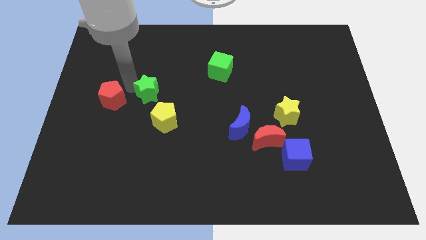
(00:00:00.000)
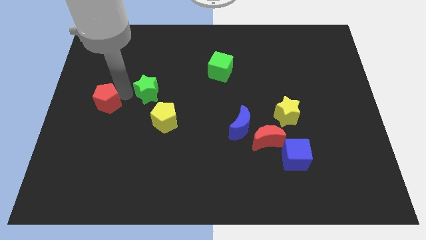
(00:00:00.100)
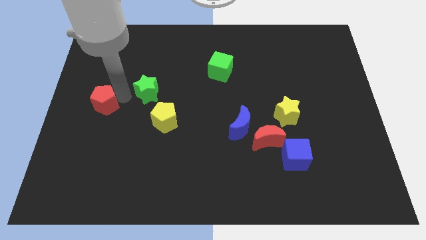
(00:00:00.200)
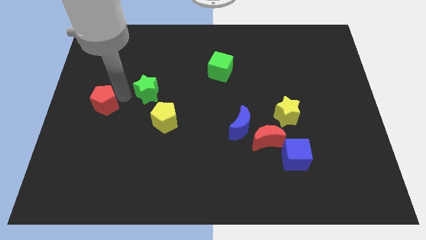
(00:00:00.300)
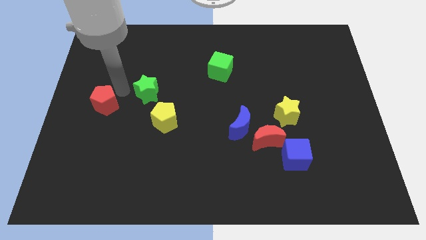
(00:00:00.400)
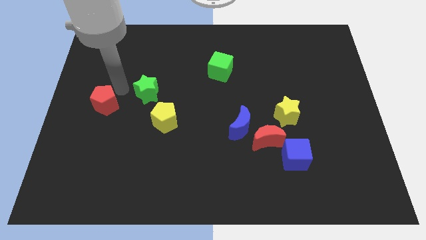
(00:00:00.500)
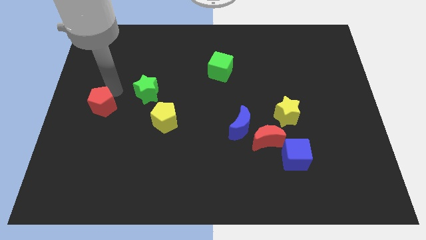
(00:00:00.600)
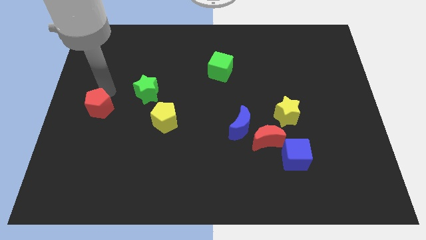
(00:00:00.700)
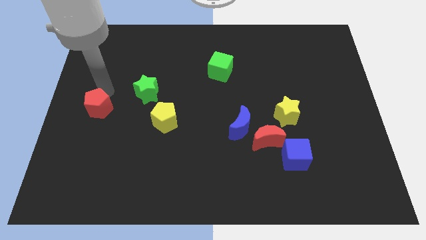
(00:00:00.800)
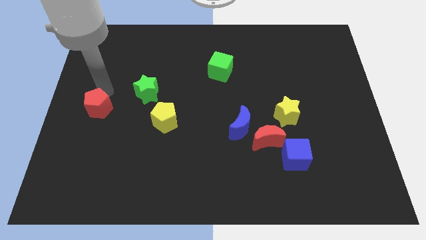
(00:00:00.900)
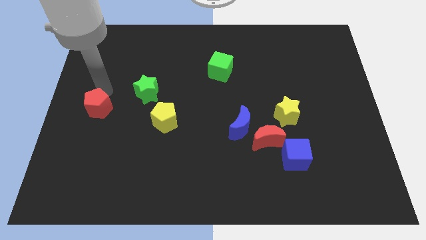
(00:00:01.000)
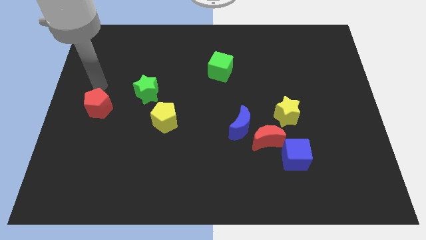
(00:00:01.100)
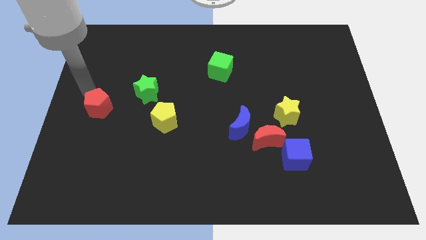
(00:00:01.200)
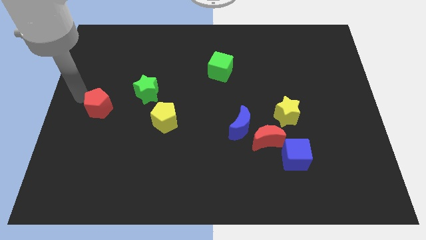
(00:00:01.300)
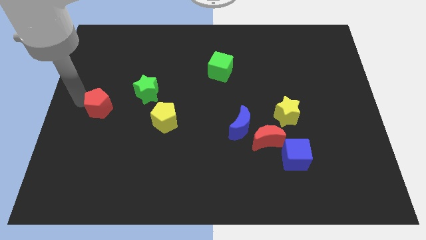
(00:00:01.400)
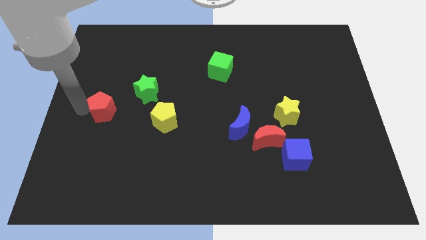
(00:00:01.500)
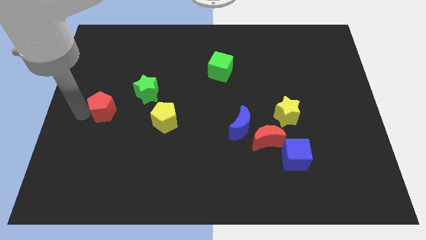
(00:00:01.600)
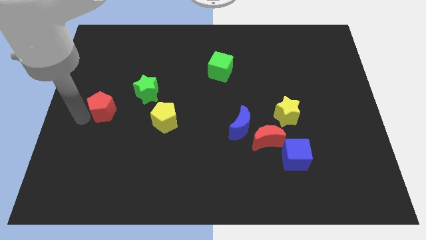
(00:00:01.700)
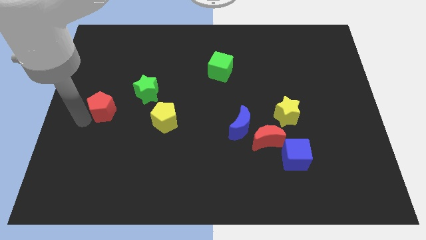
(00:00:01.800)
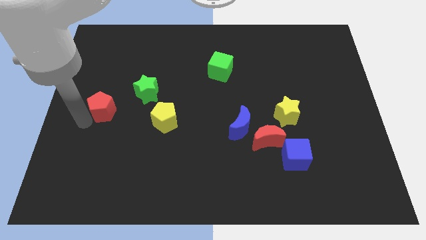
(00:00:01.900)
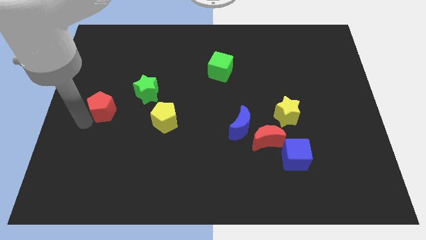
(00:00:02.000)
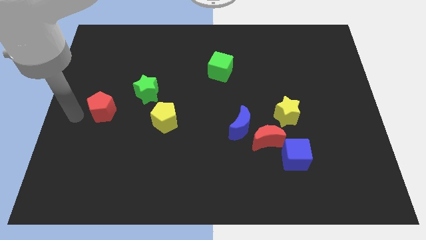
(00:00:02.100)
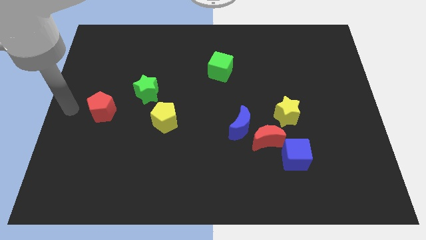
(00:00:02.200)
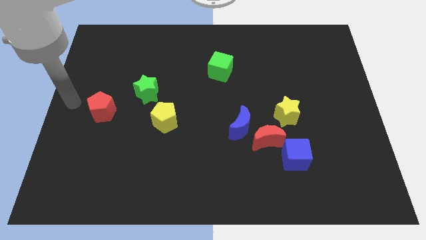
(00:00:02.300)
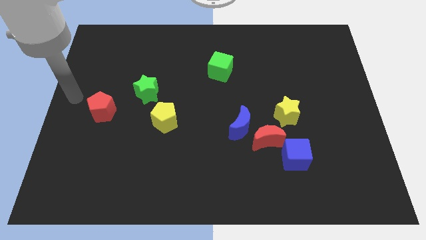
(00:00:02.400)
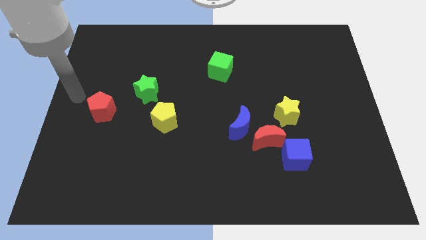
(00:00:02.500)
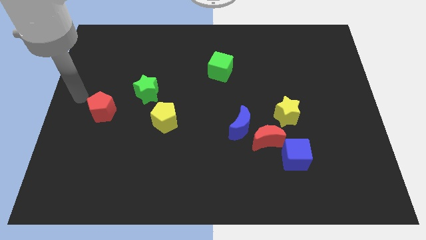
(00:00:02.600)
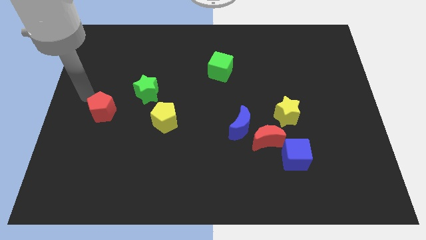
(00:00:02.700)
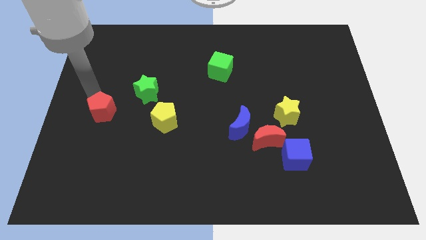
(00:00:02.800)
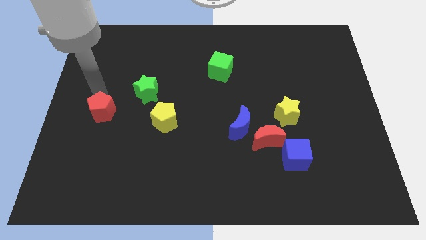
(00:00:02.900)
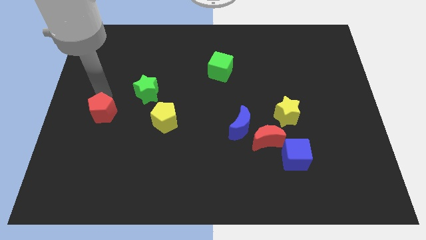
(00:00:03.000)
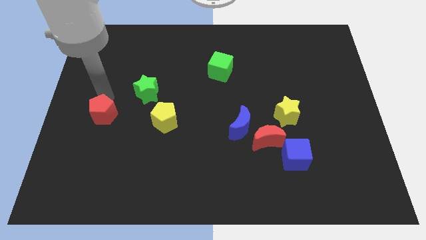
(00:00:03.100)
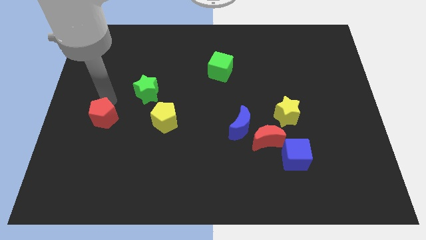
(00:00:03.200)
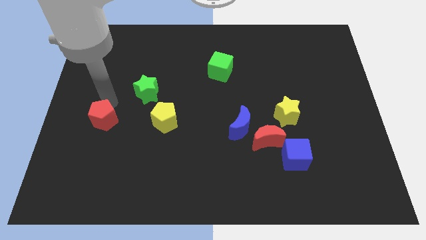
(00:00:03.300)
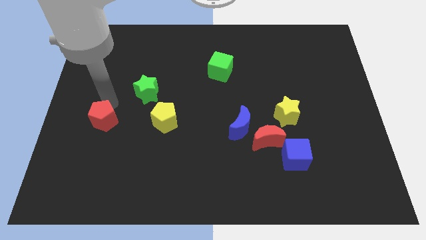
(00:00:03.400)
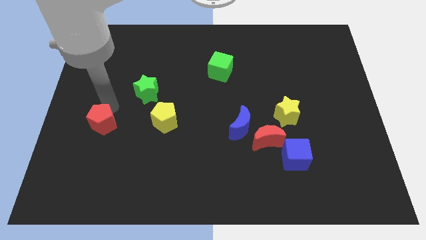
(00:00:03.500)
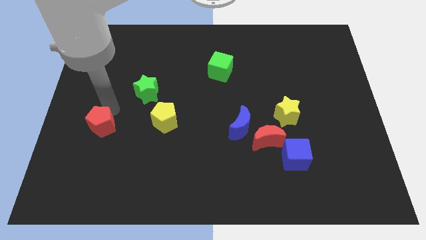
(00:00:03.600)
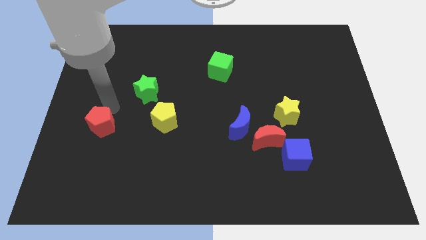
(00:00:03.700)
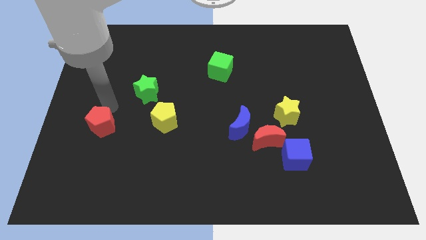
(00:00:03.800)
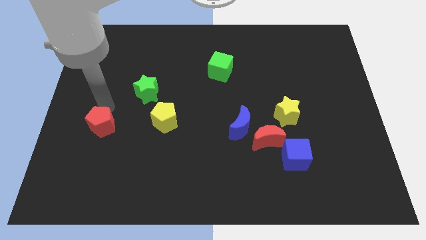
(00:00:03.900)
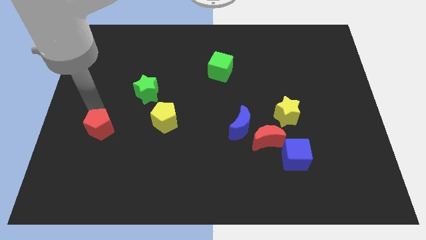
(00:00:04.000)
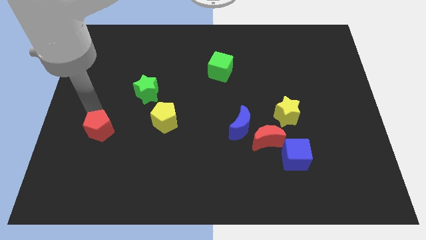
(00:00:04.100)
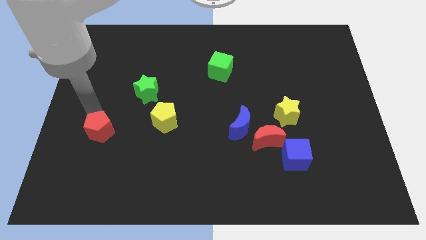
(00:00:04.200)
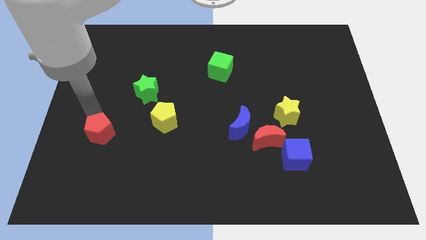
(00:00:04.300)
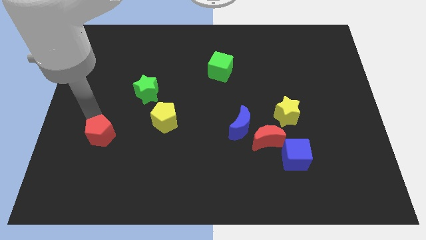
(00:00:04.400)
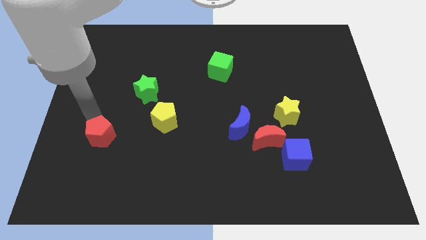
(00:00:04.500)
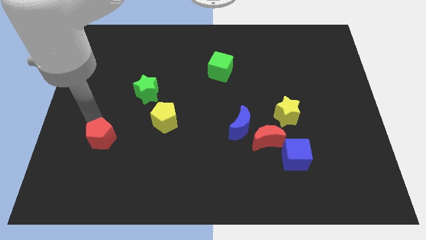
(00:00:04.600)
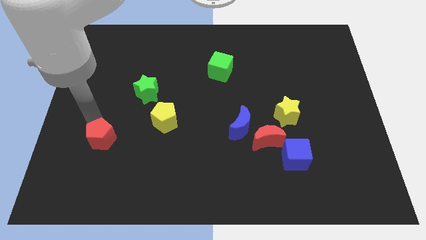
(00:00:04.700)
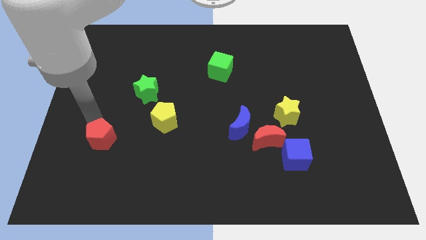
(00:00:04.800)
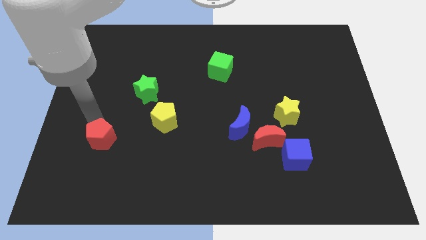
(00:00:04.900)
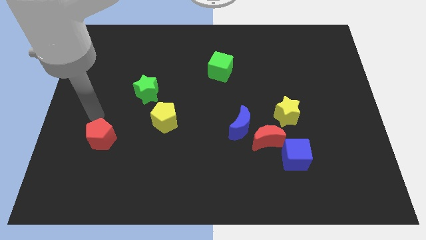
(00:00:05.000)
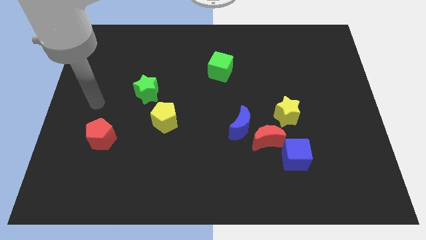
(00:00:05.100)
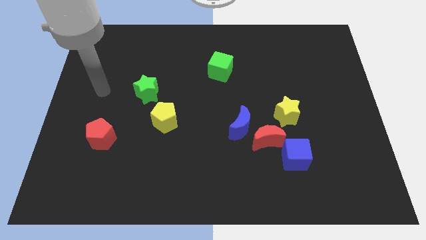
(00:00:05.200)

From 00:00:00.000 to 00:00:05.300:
move the red pentagon diagonally bottom left to the green star

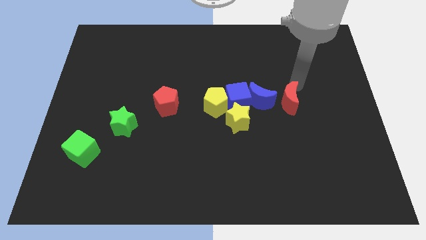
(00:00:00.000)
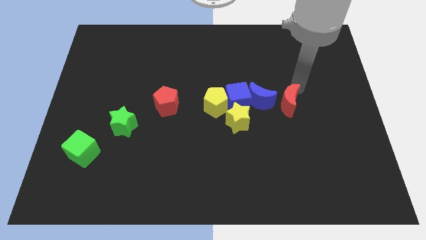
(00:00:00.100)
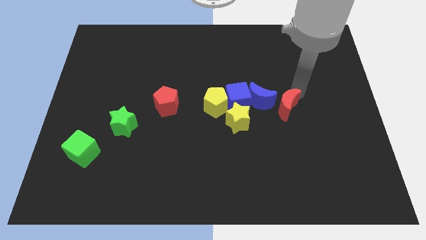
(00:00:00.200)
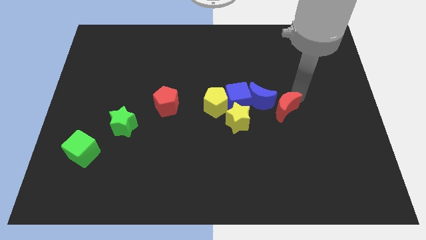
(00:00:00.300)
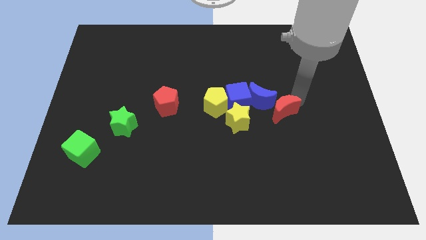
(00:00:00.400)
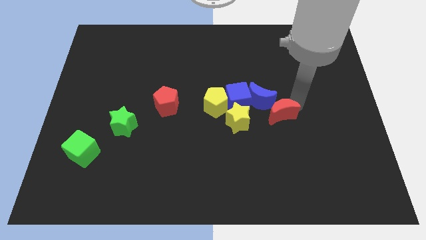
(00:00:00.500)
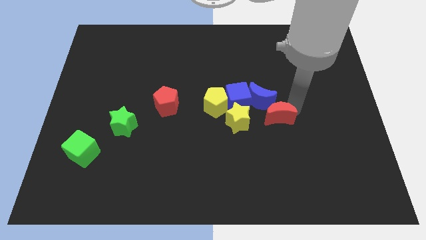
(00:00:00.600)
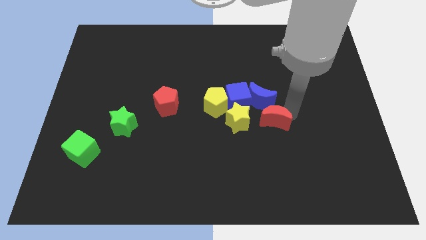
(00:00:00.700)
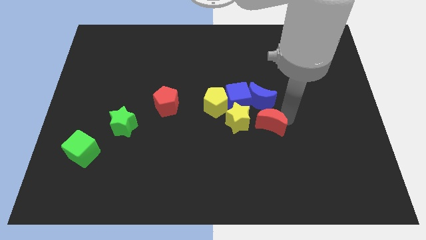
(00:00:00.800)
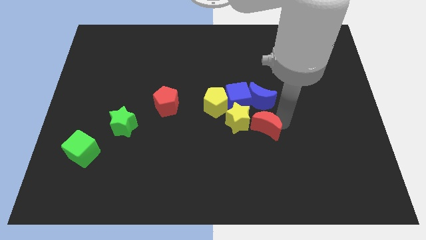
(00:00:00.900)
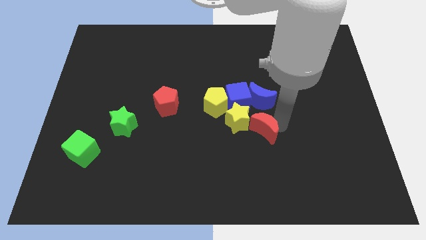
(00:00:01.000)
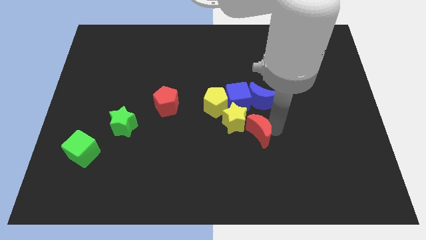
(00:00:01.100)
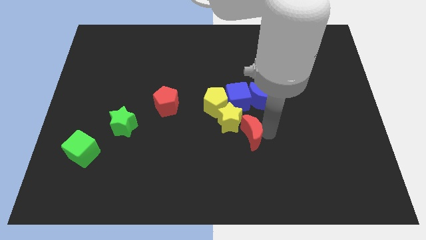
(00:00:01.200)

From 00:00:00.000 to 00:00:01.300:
push the red moon into the yellow star

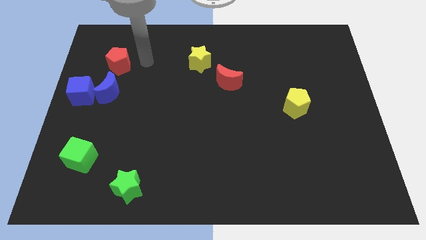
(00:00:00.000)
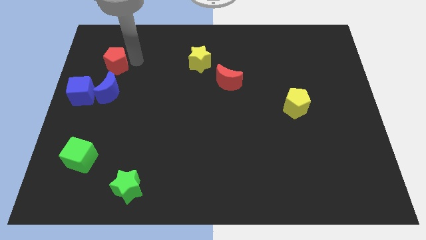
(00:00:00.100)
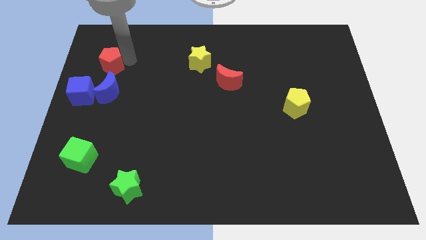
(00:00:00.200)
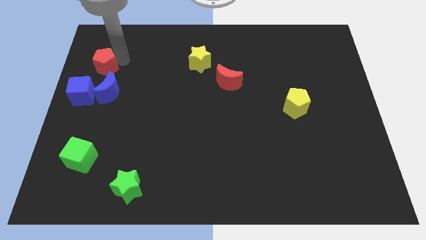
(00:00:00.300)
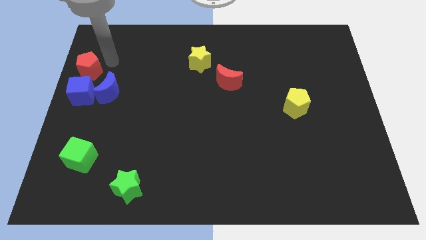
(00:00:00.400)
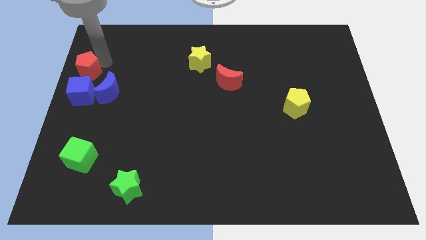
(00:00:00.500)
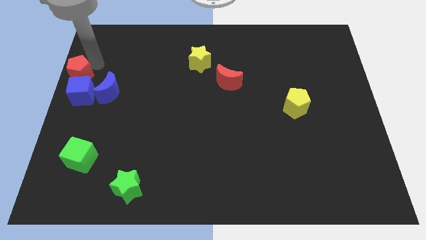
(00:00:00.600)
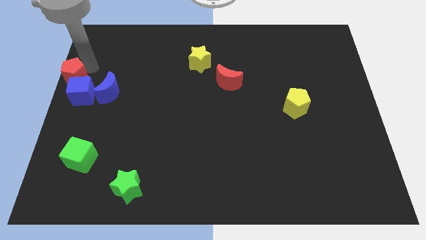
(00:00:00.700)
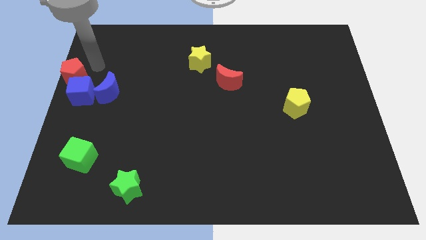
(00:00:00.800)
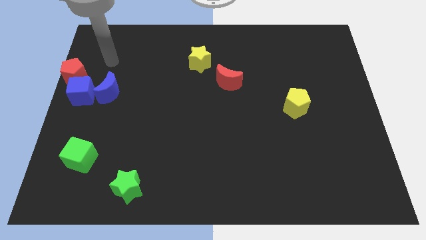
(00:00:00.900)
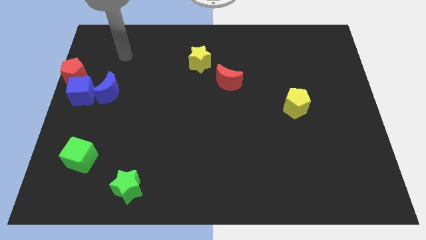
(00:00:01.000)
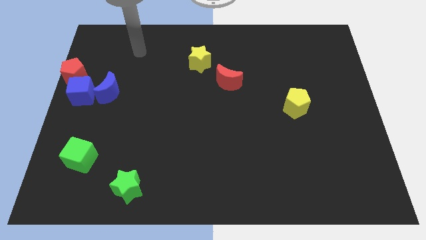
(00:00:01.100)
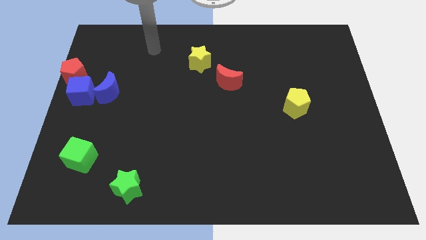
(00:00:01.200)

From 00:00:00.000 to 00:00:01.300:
put the red pentagon above the blue cube

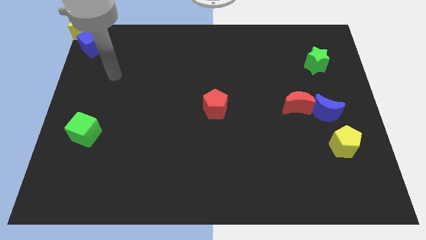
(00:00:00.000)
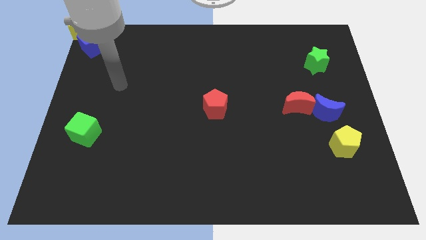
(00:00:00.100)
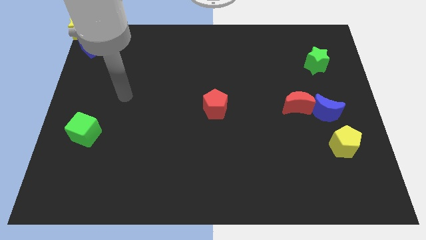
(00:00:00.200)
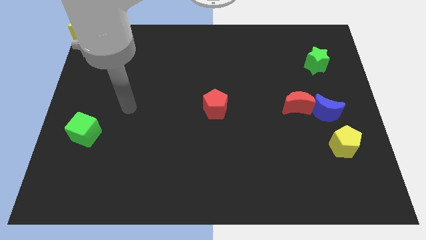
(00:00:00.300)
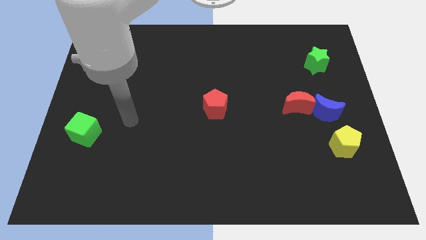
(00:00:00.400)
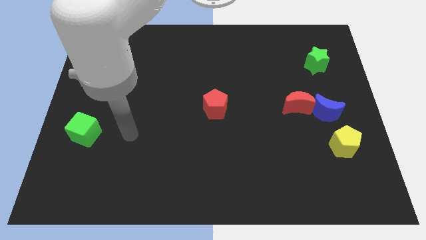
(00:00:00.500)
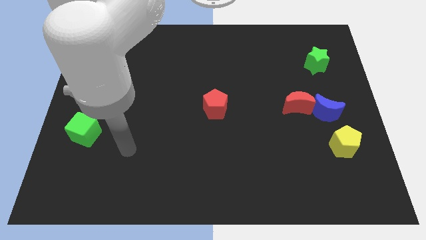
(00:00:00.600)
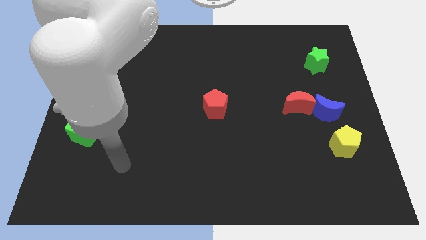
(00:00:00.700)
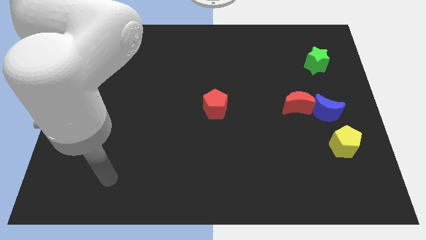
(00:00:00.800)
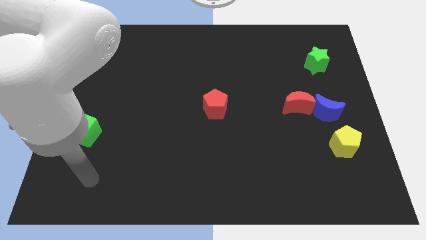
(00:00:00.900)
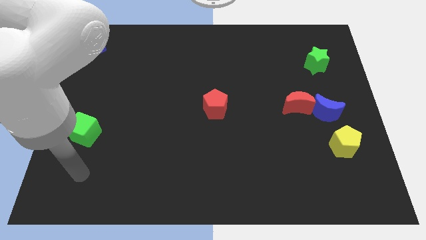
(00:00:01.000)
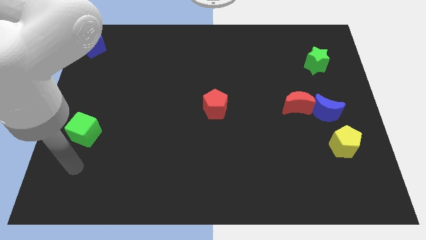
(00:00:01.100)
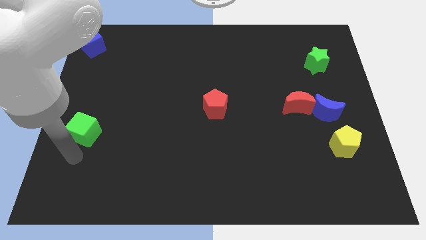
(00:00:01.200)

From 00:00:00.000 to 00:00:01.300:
move your arm at the bottom of the green cube
